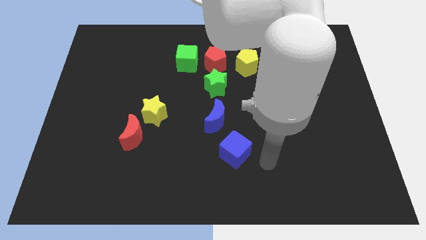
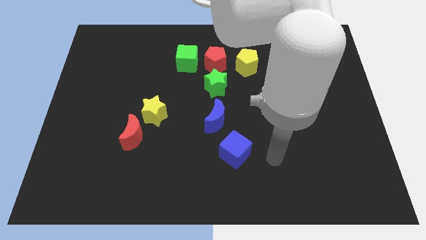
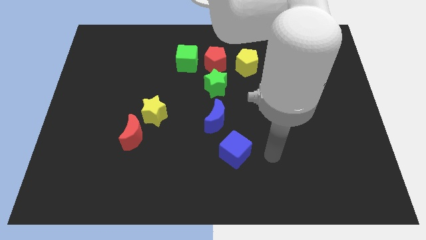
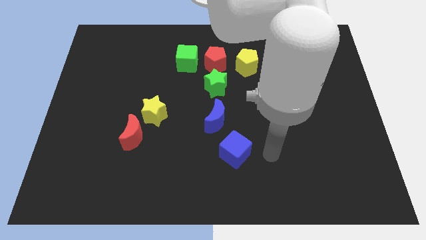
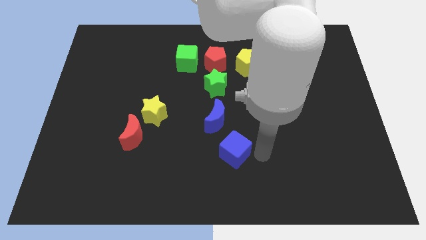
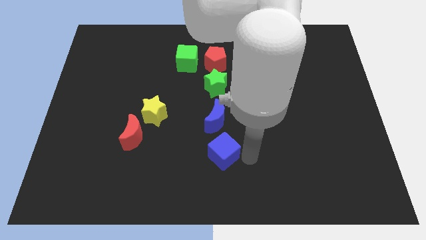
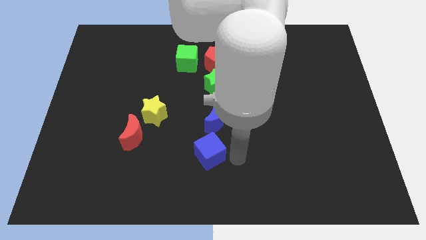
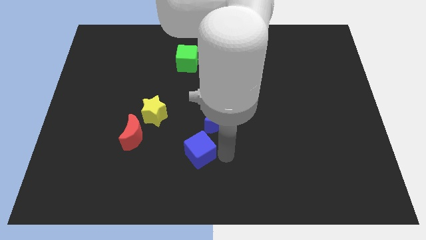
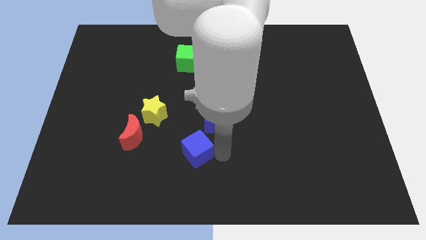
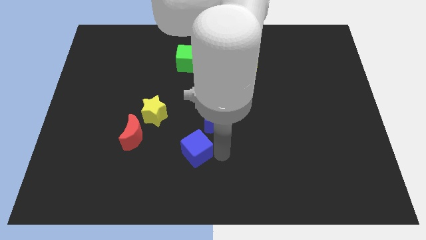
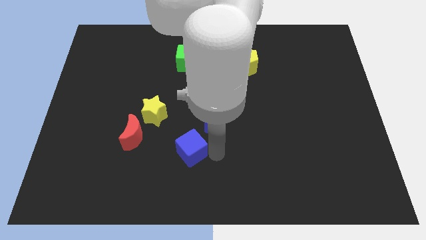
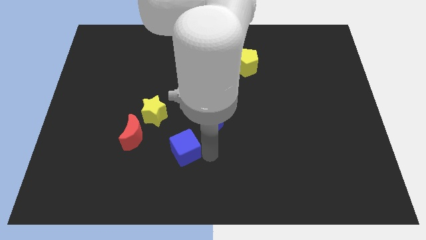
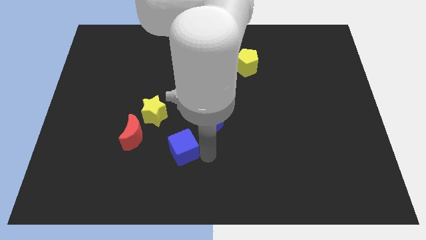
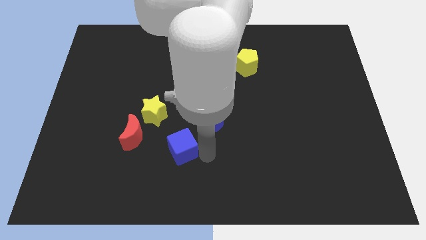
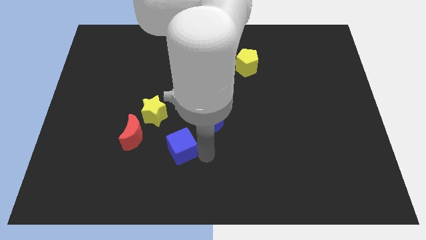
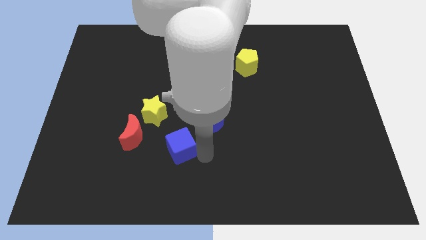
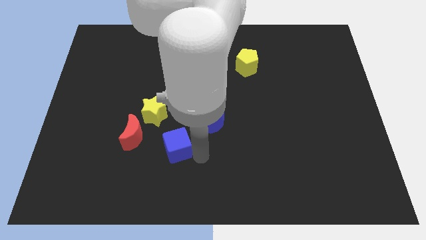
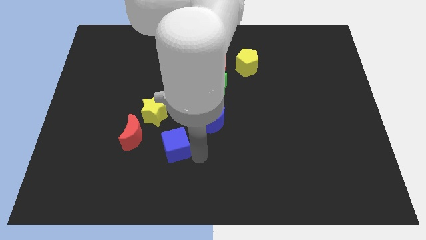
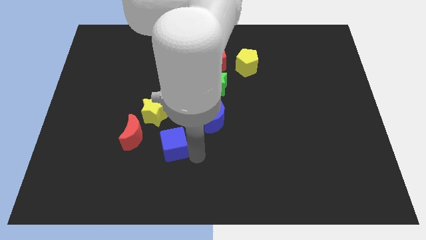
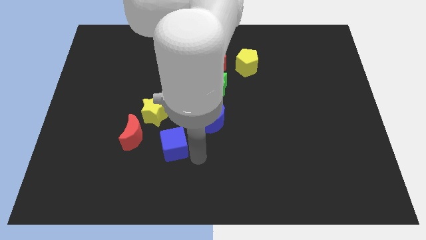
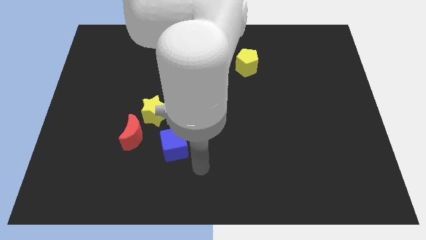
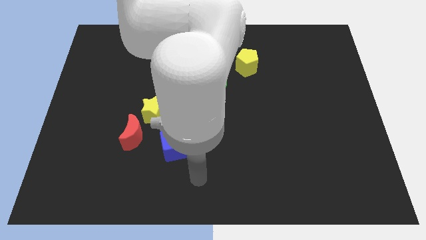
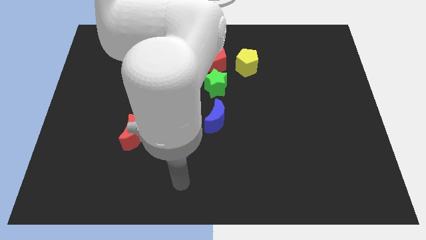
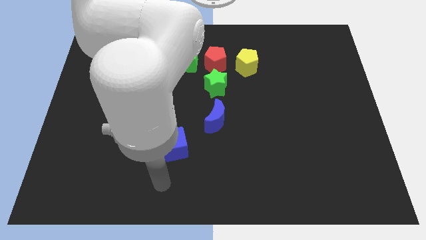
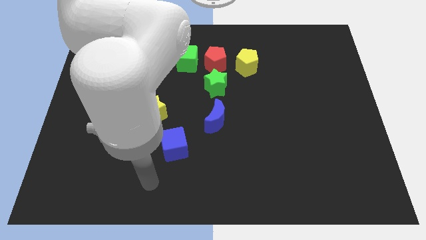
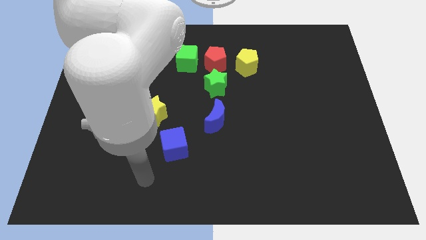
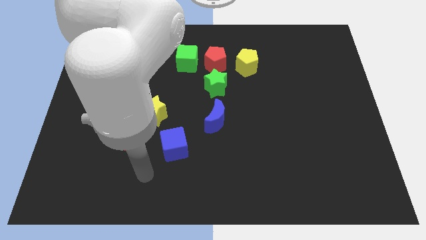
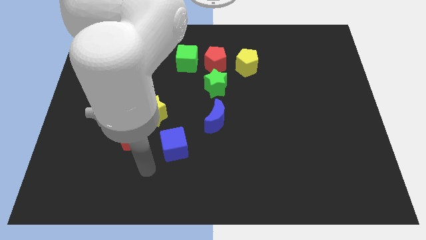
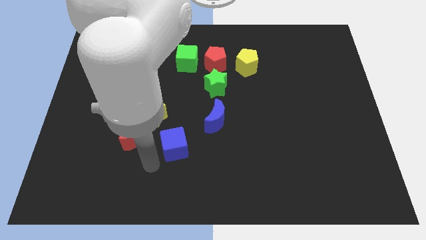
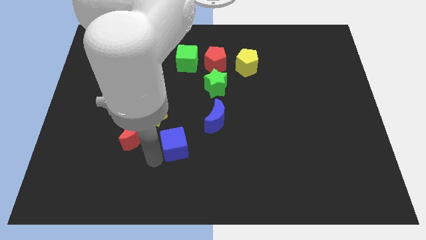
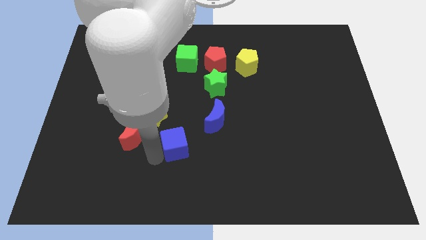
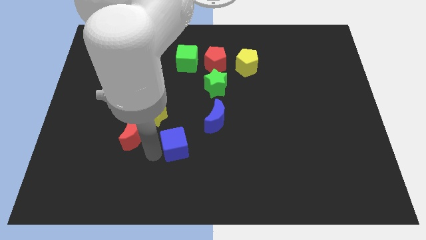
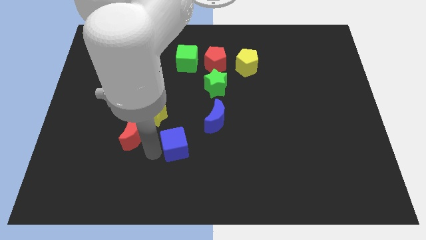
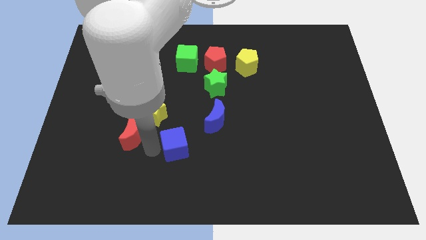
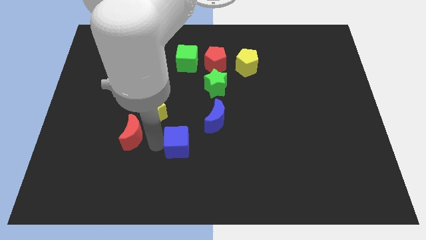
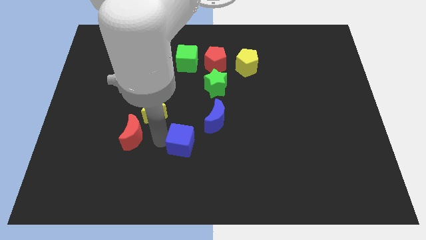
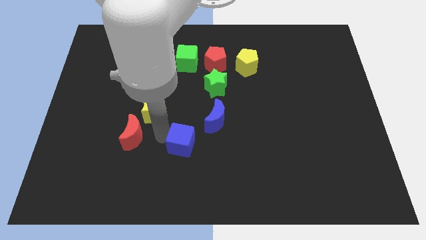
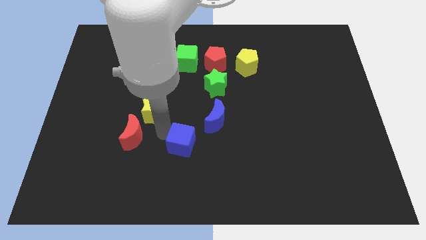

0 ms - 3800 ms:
place the blue cube to the right of the red crescent

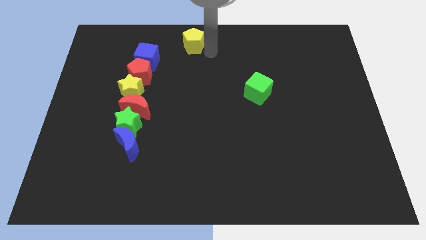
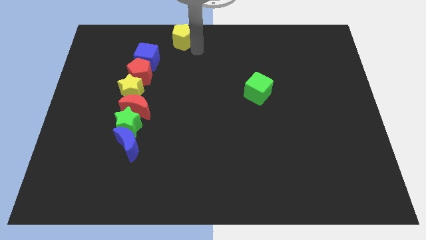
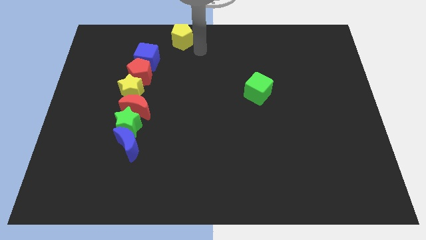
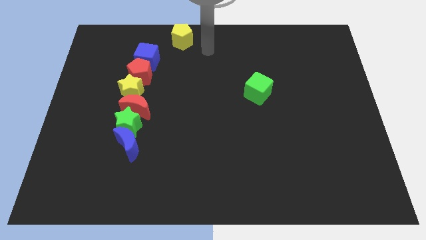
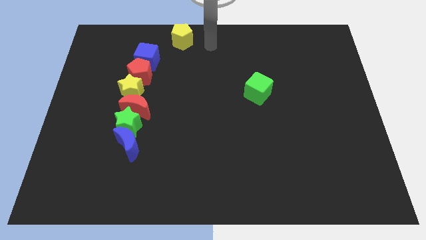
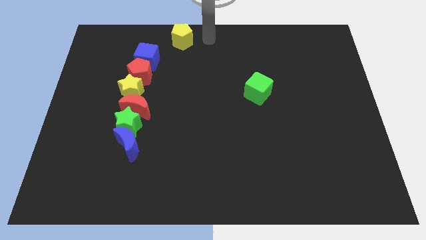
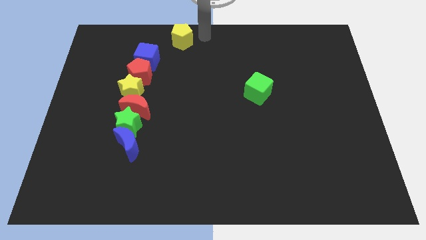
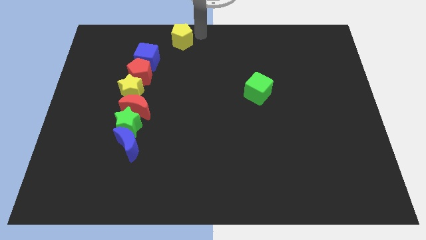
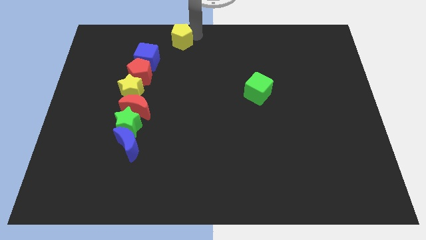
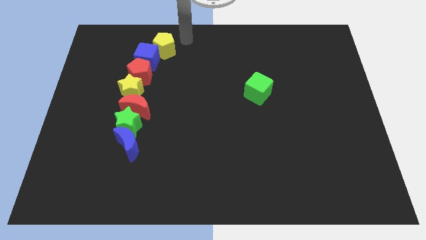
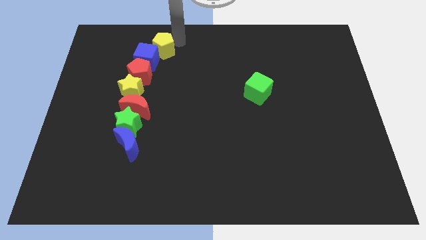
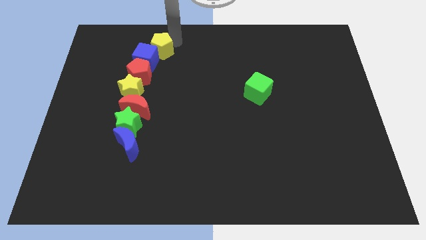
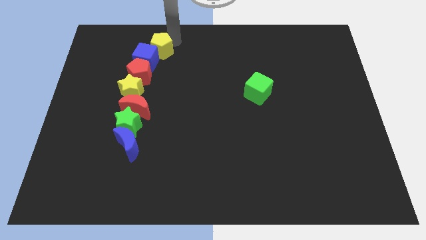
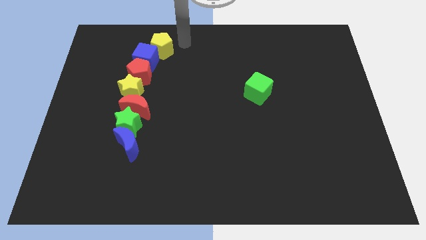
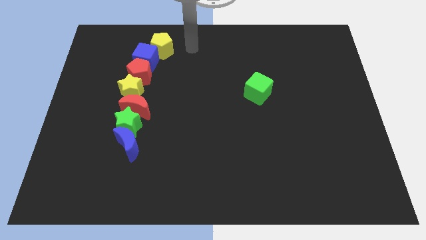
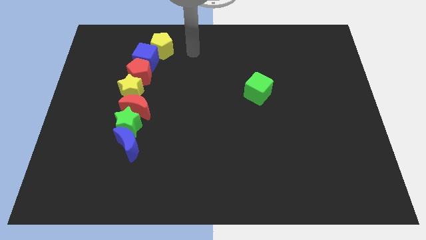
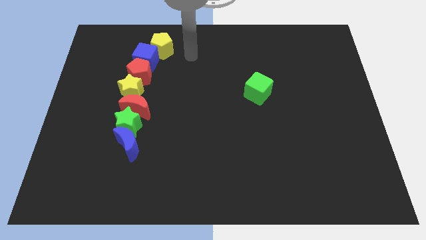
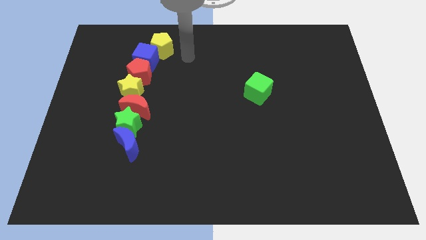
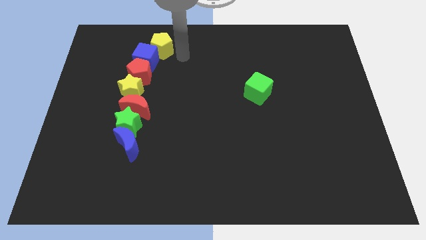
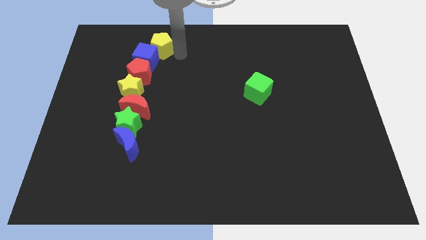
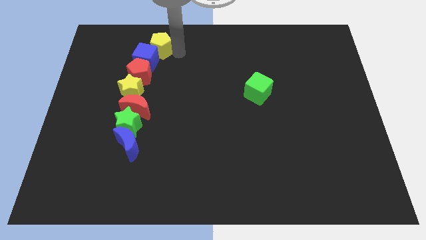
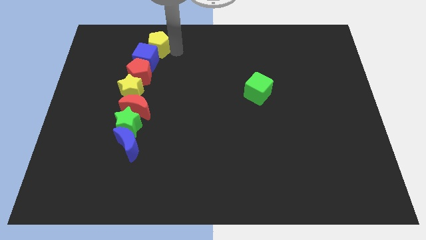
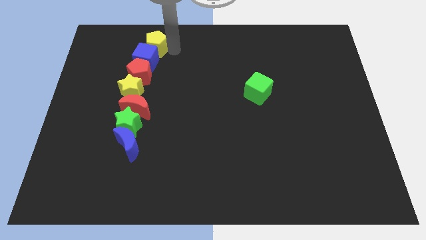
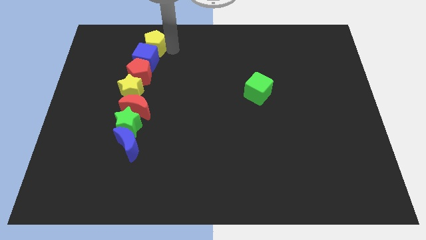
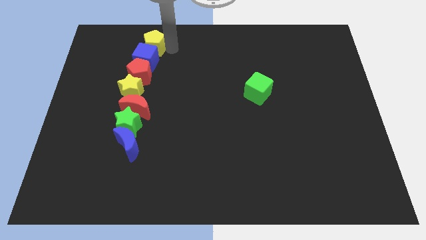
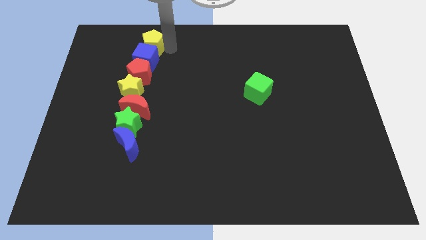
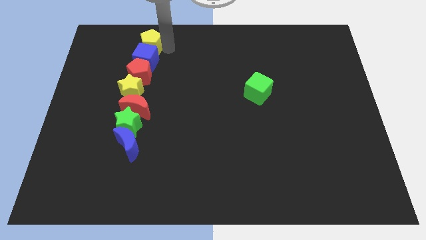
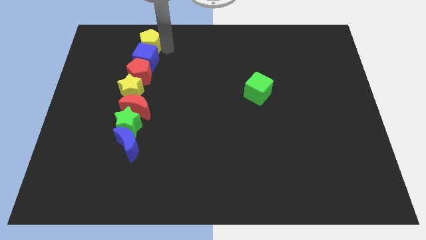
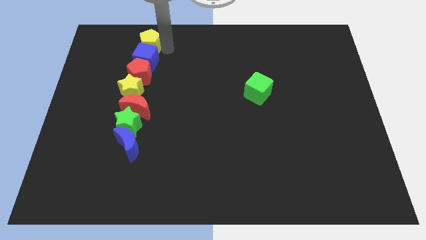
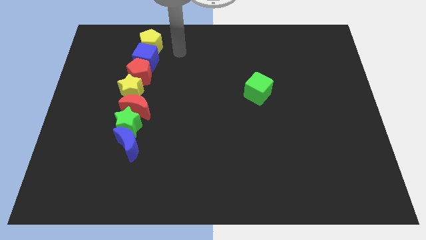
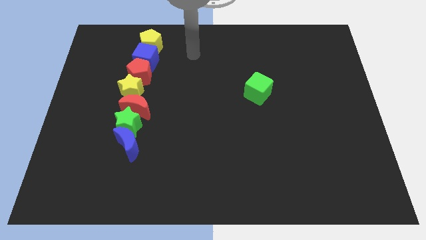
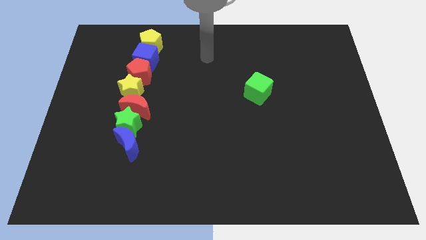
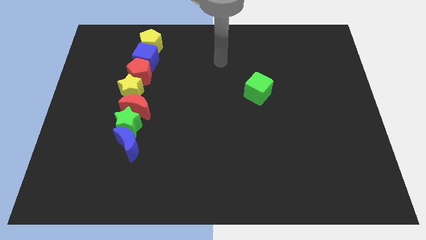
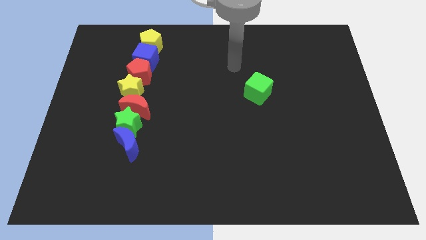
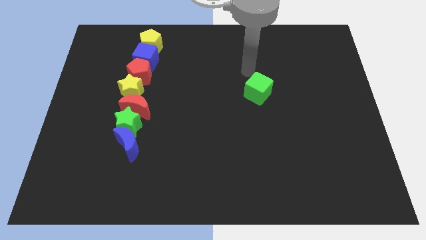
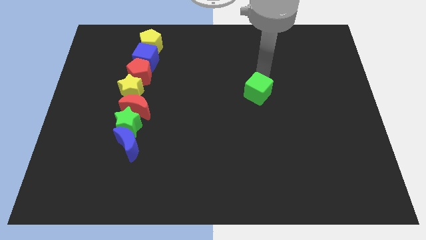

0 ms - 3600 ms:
move the arm away from the yellow pentagon
